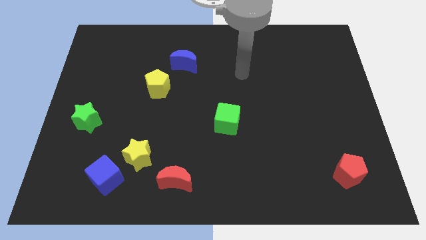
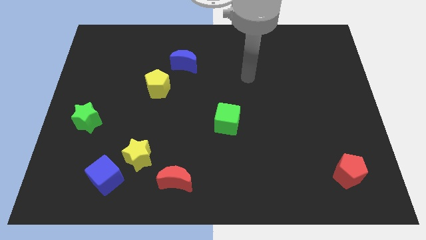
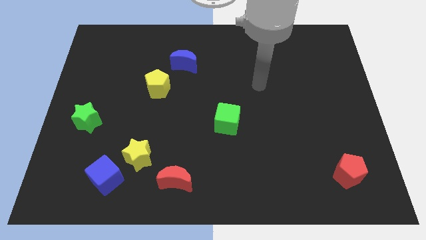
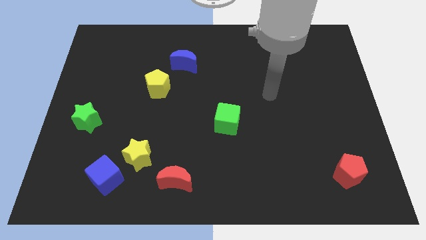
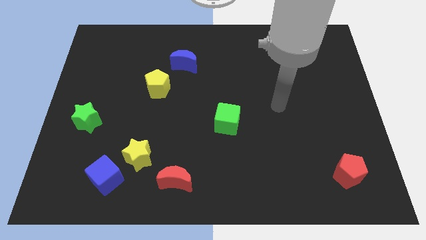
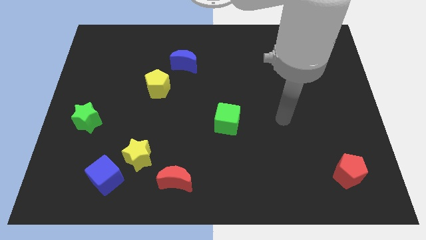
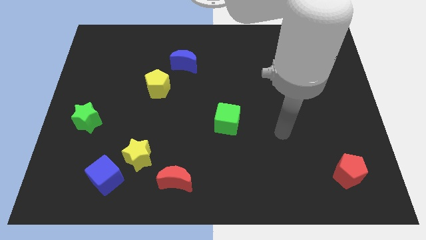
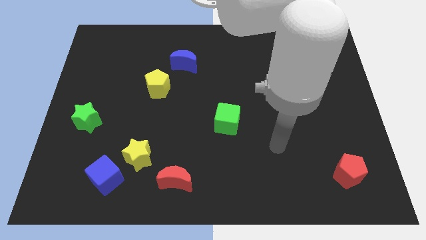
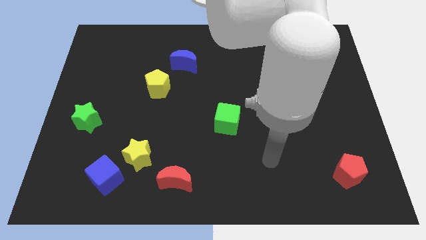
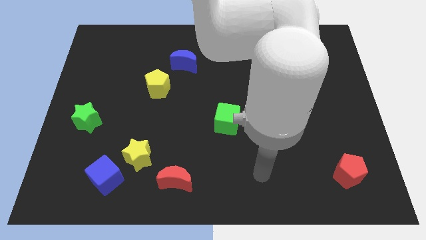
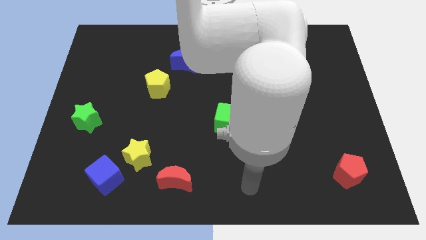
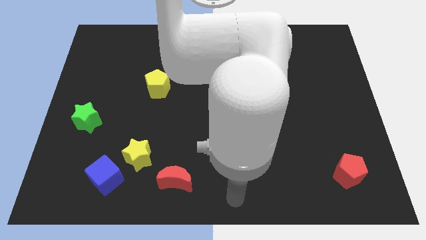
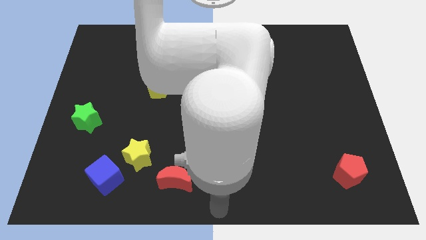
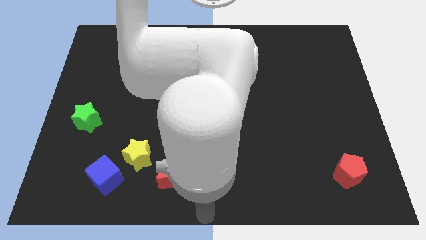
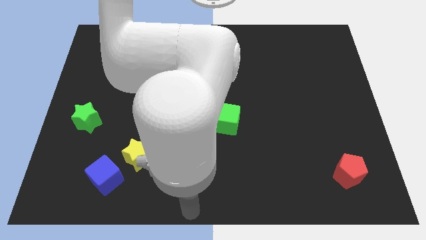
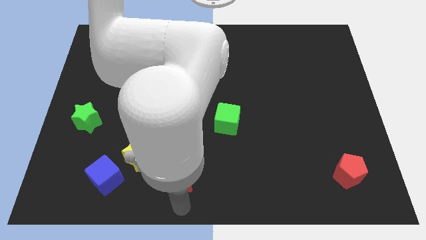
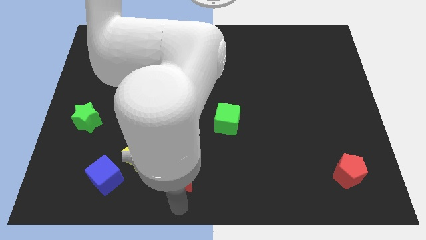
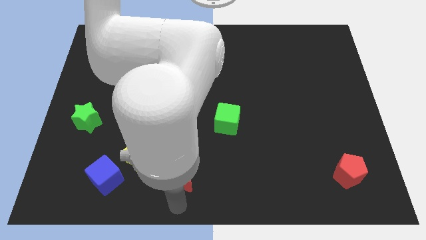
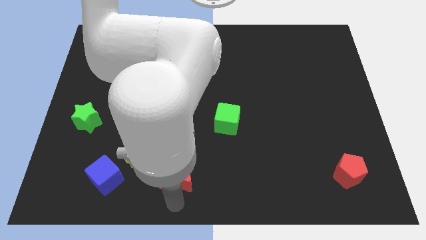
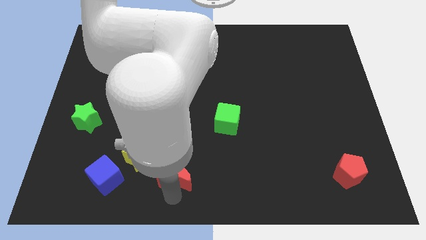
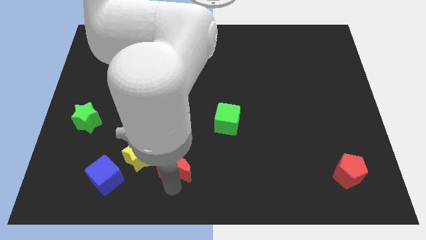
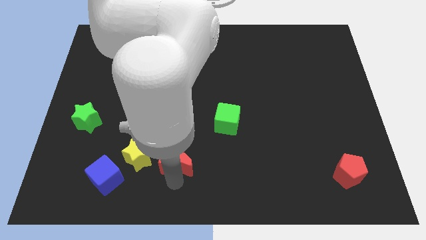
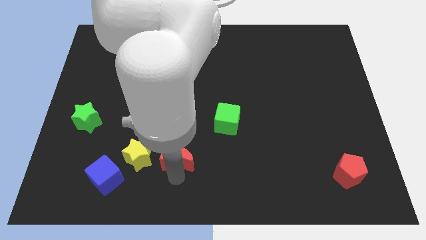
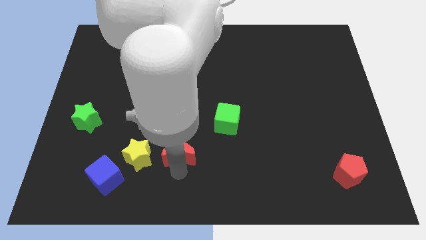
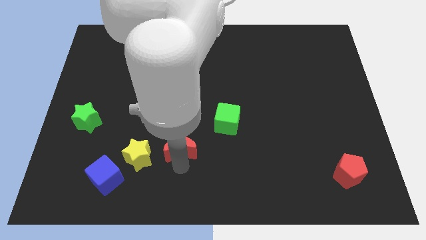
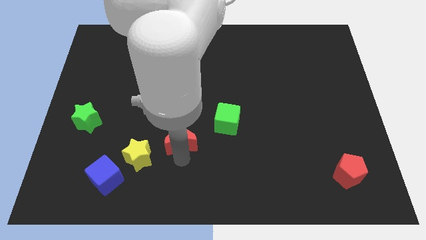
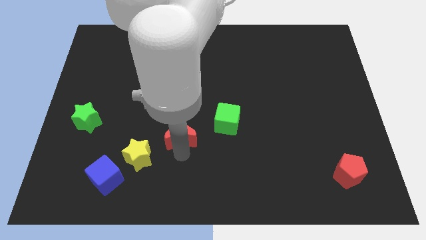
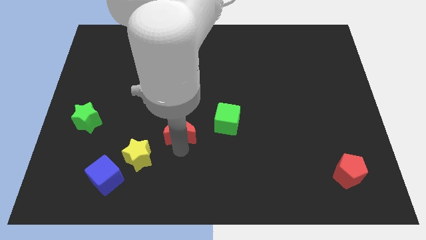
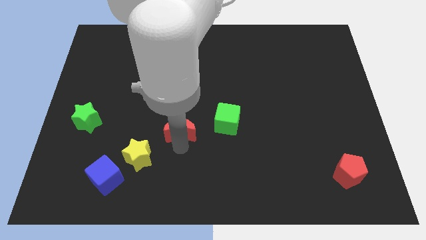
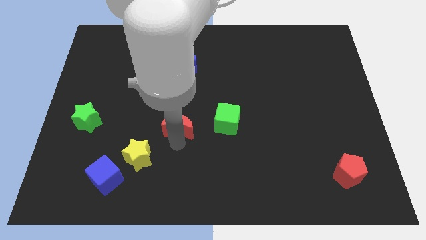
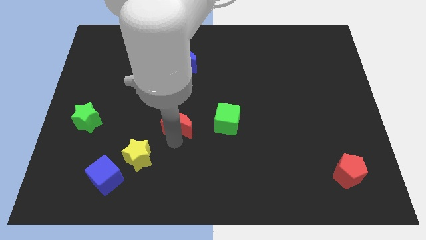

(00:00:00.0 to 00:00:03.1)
move the red moon to the center side

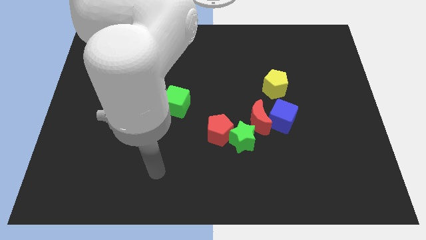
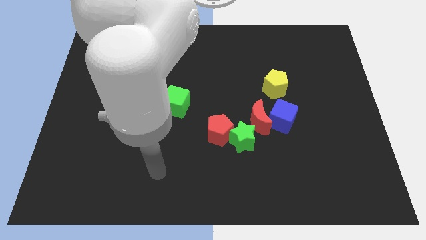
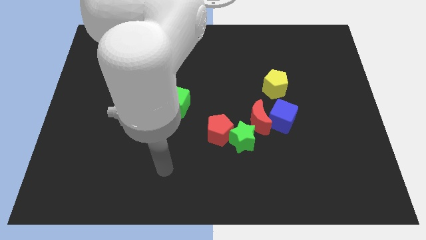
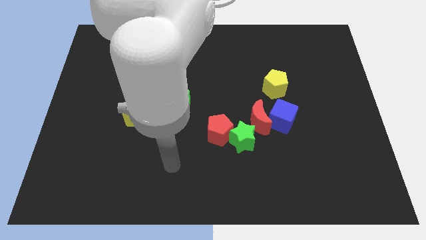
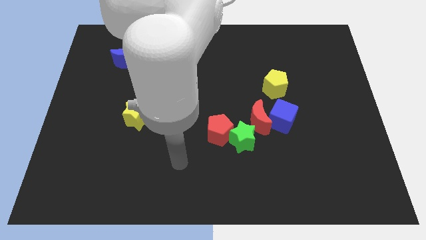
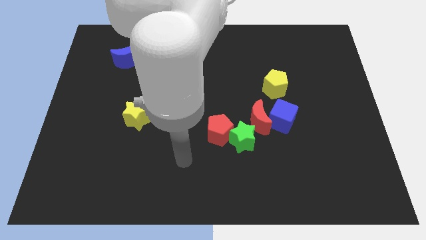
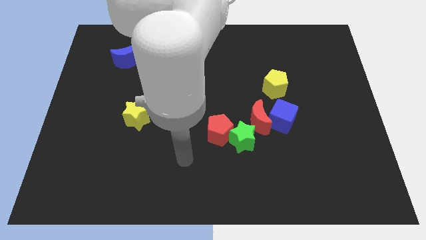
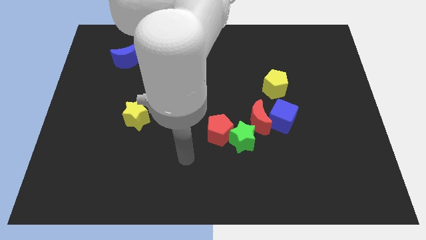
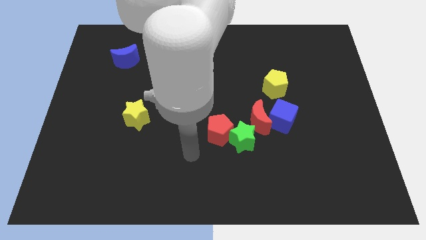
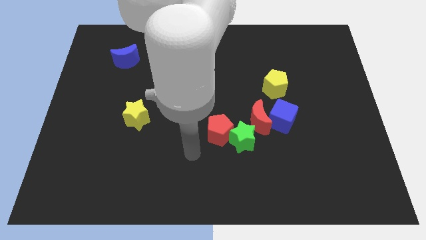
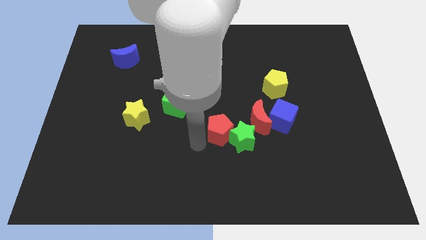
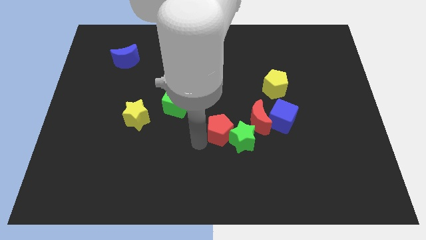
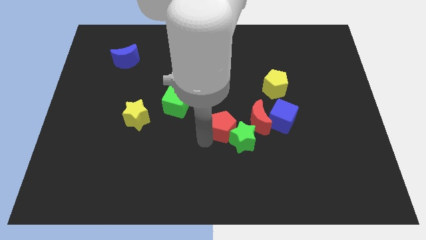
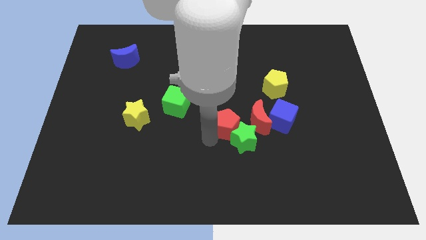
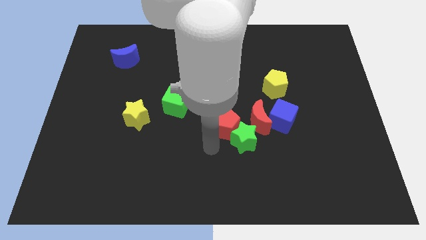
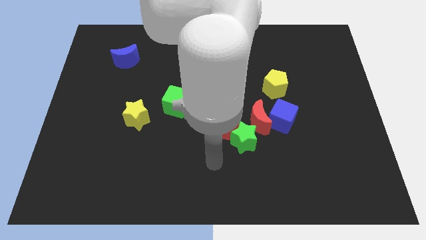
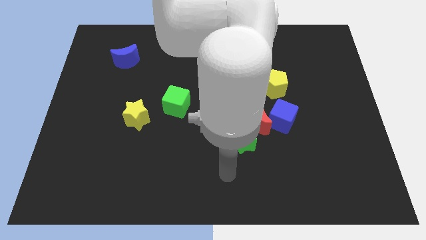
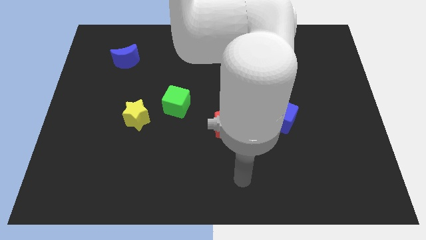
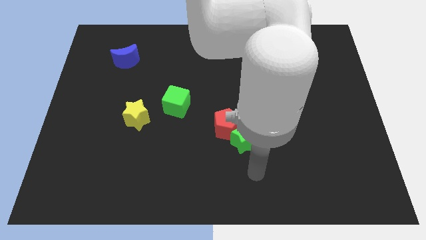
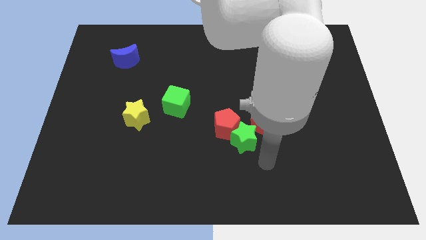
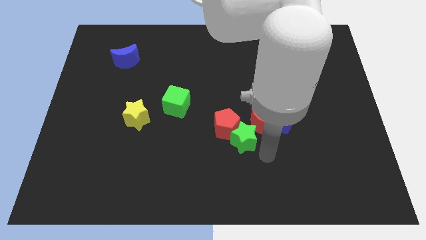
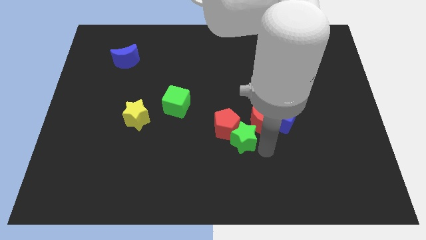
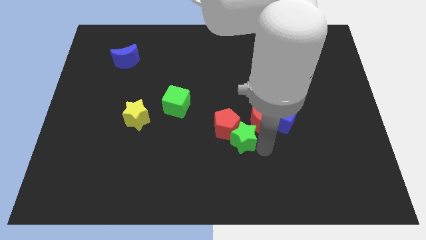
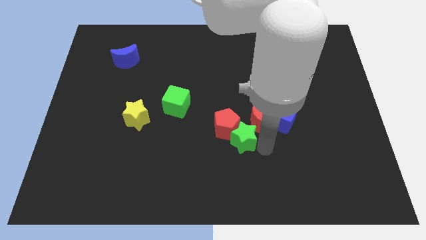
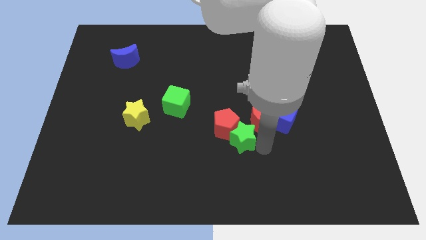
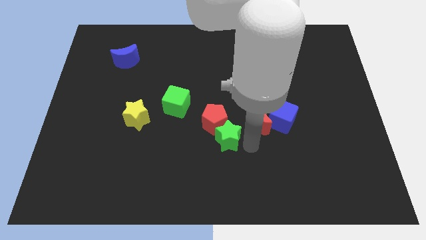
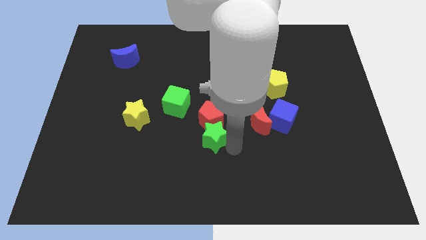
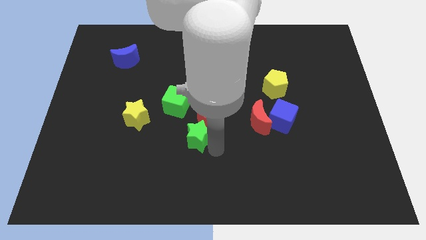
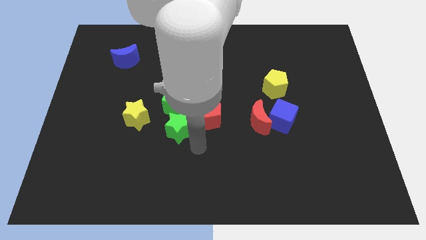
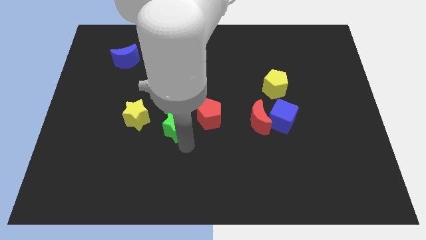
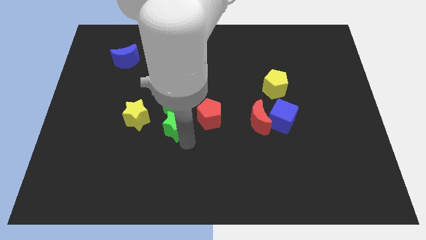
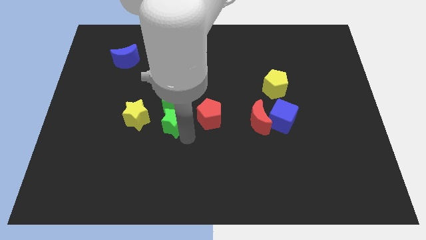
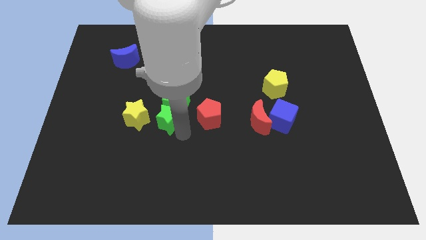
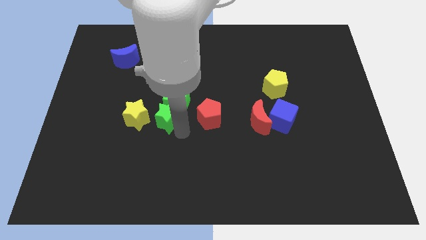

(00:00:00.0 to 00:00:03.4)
push the green star below the green cube

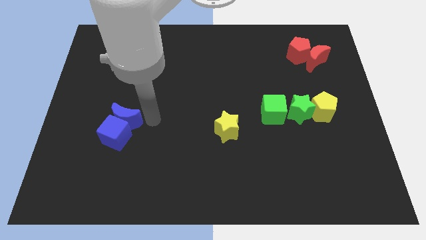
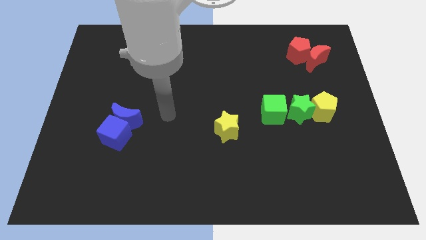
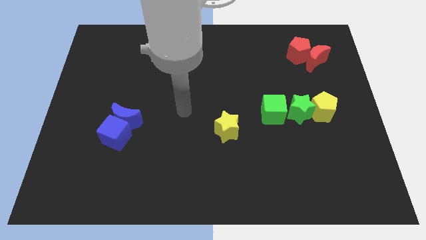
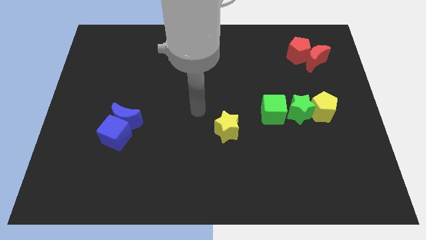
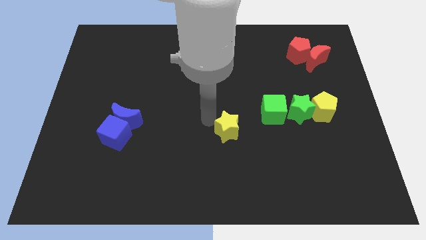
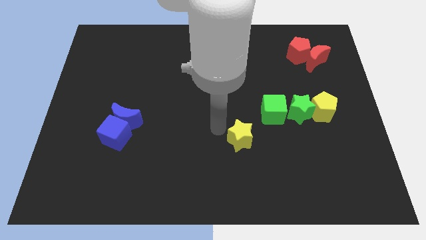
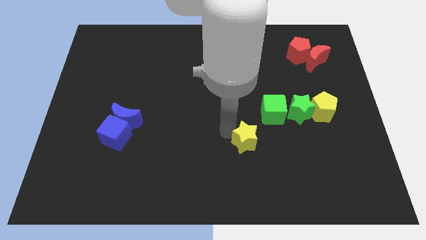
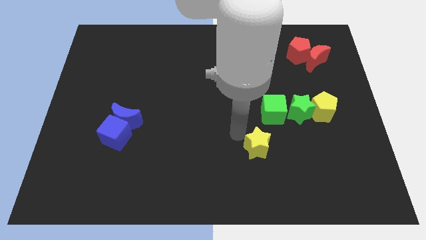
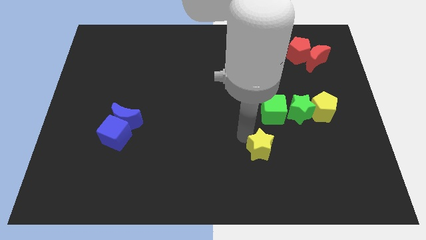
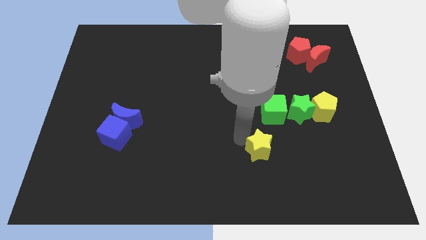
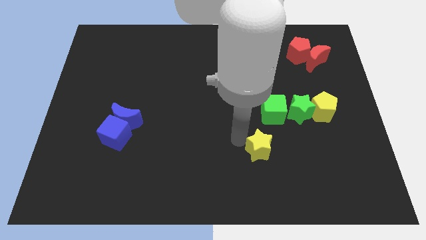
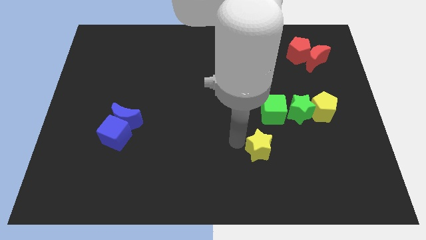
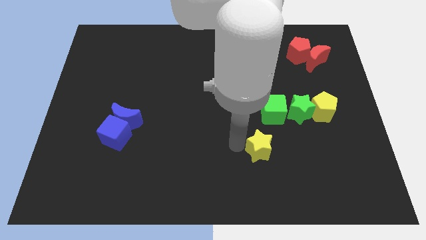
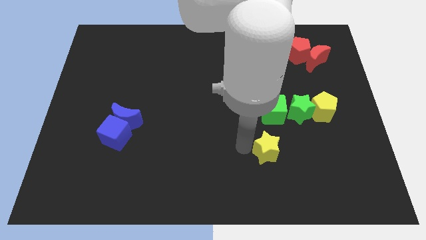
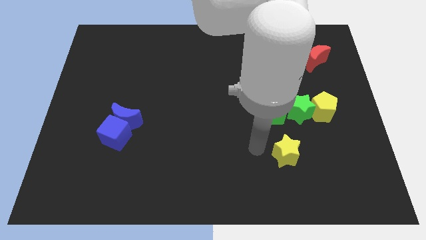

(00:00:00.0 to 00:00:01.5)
move the yellow star slightly towards the bottom right corner of the board

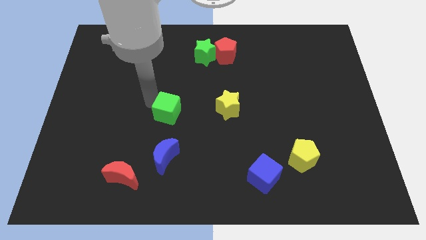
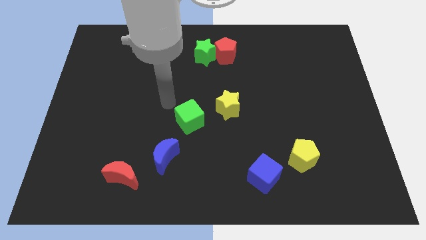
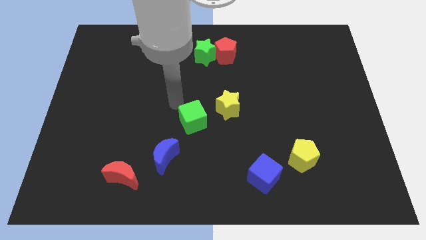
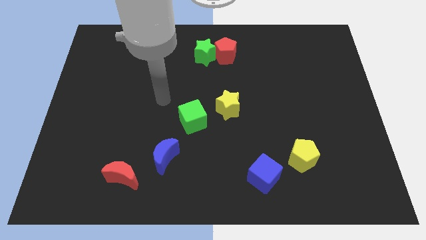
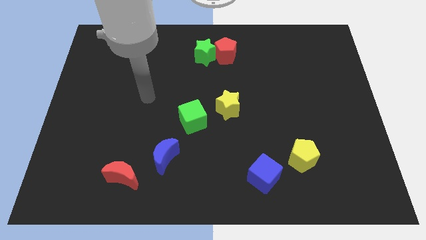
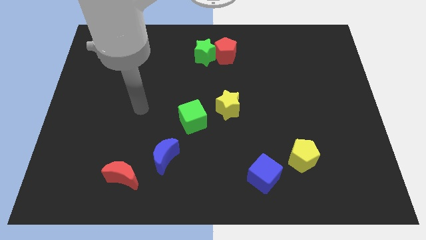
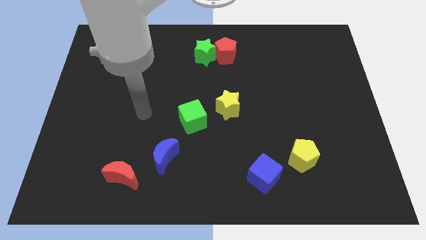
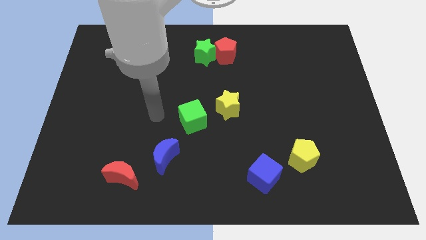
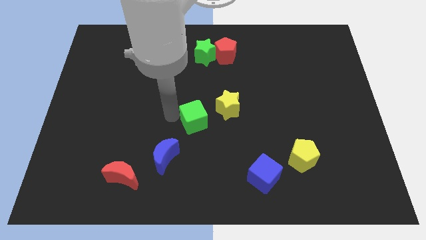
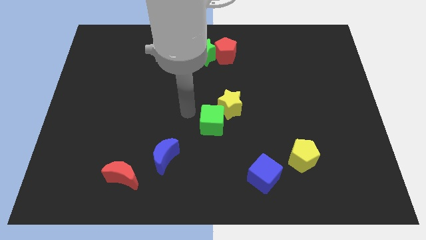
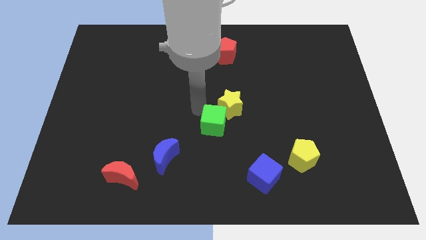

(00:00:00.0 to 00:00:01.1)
move the green cube to the left of the yellow star
